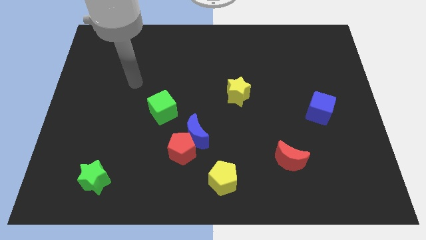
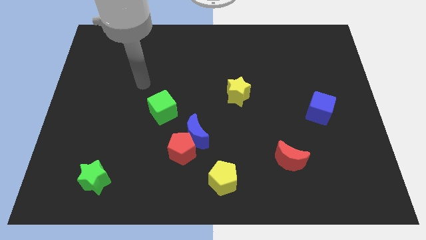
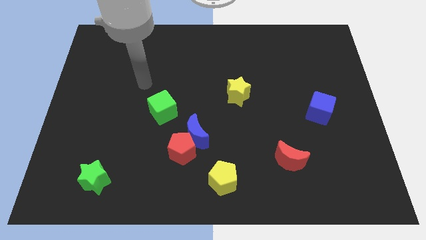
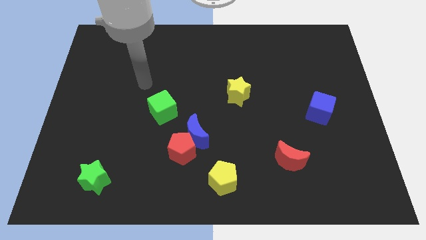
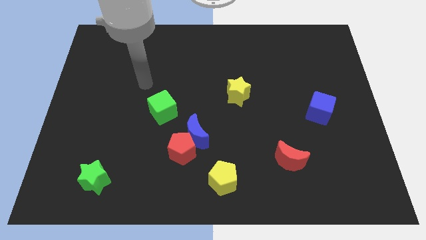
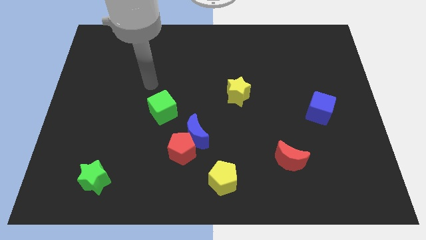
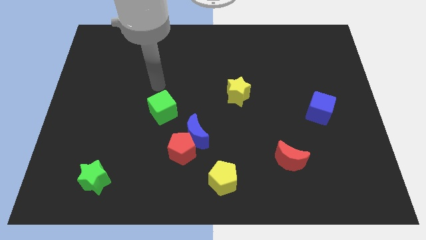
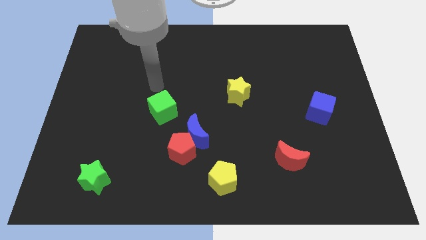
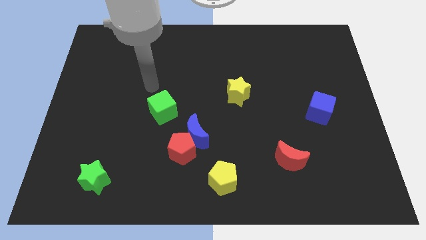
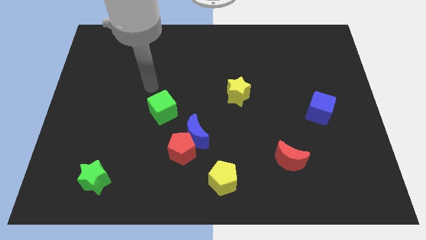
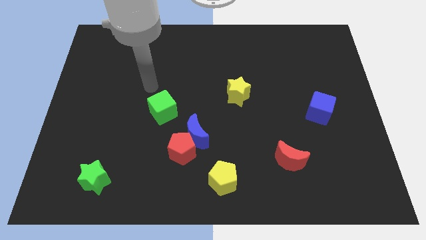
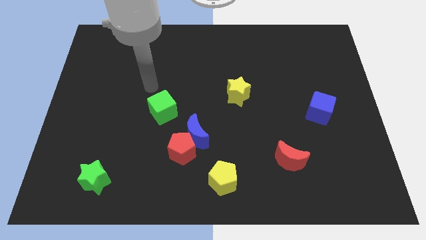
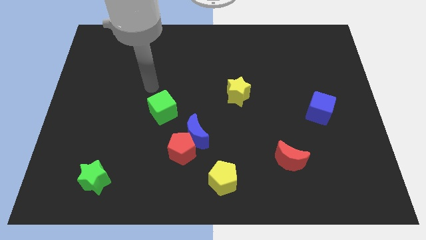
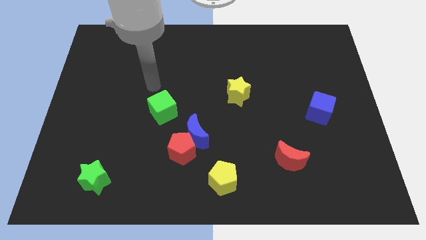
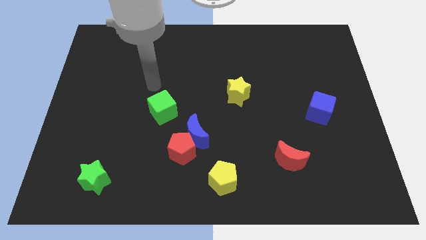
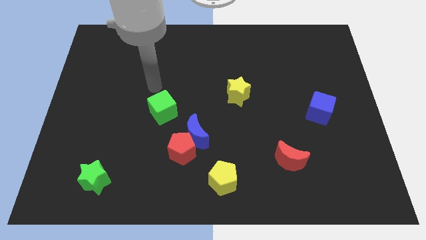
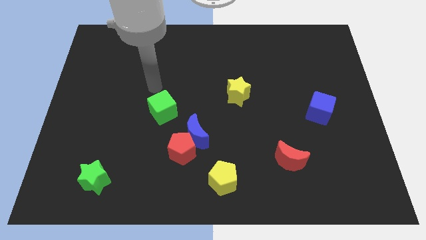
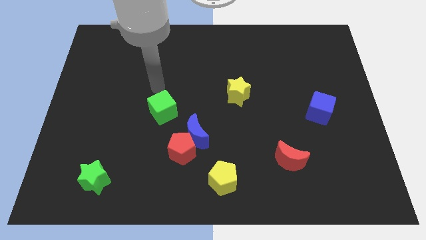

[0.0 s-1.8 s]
move the arm slightly to the green cube

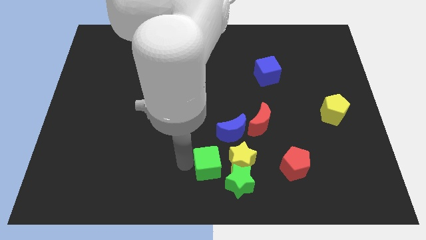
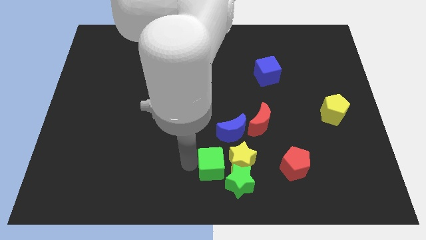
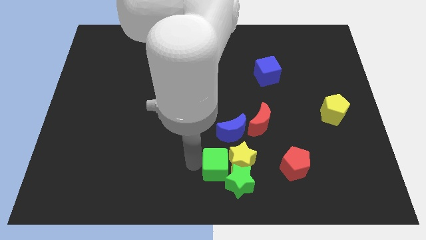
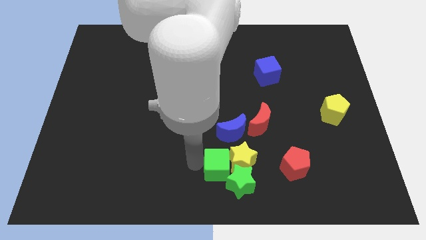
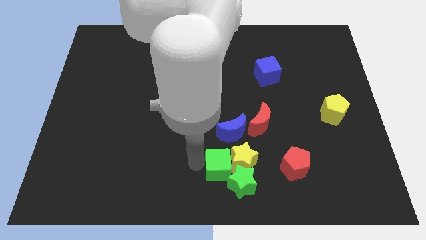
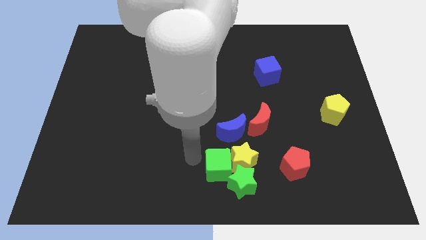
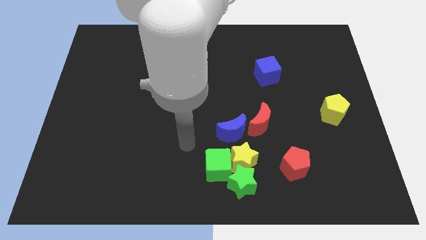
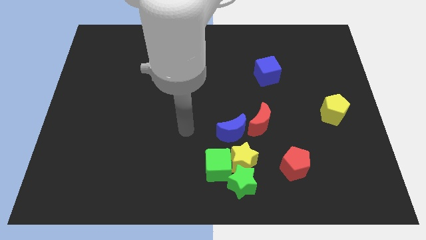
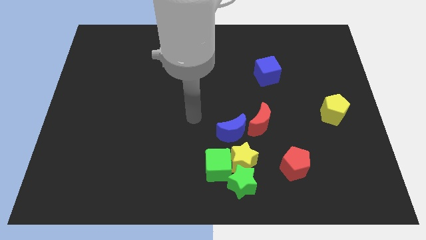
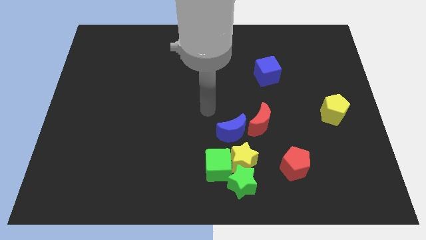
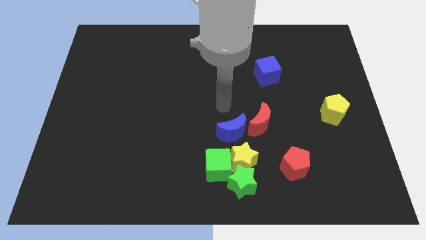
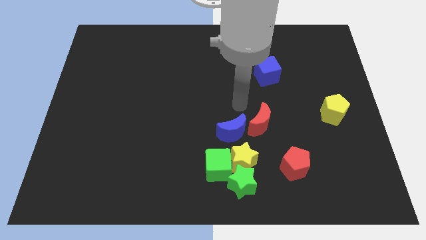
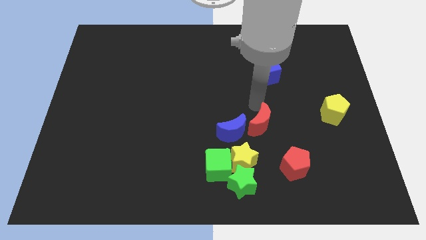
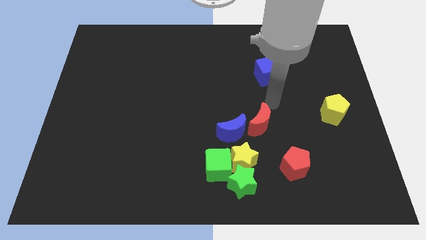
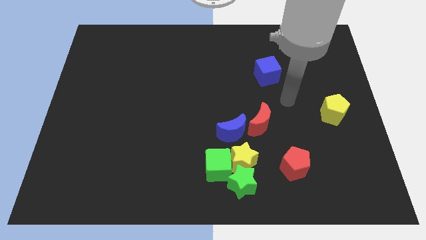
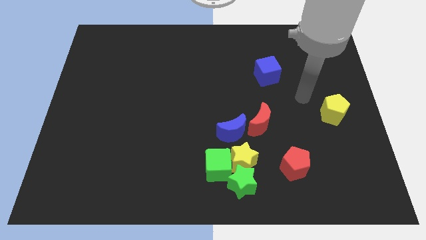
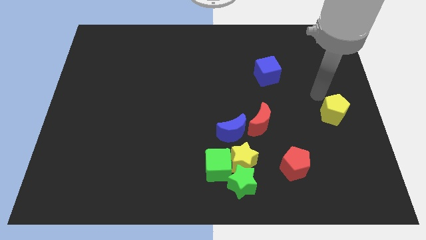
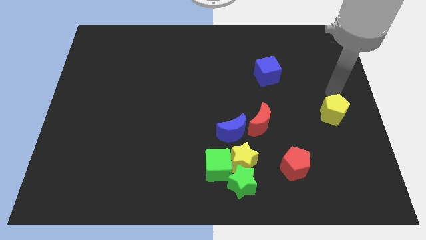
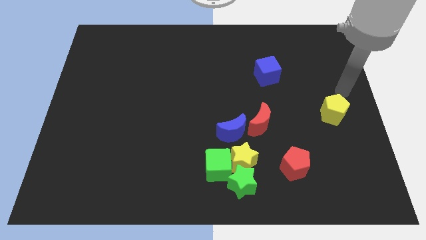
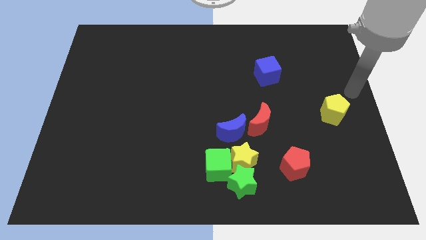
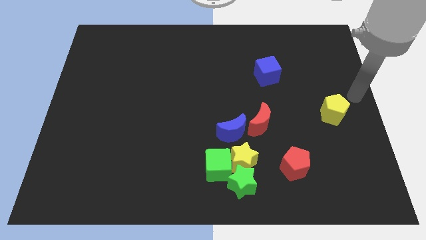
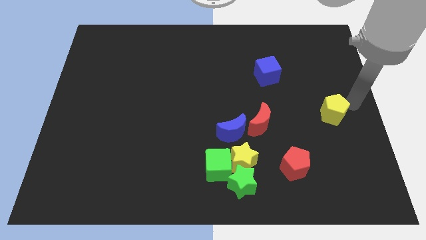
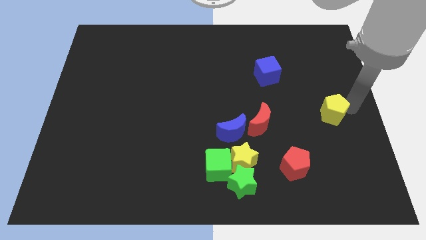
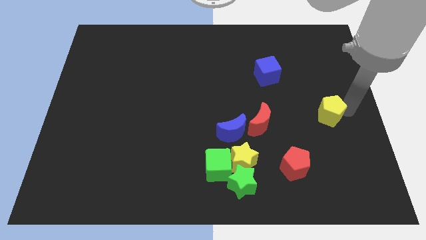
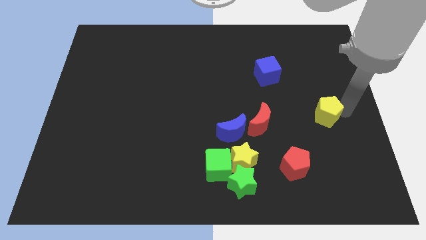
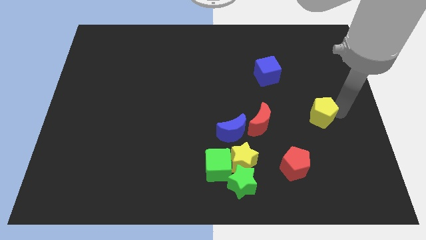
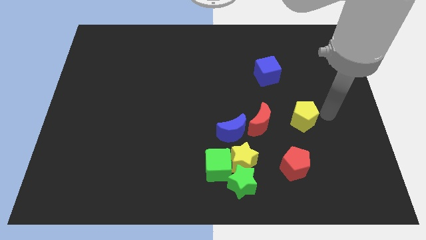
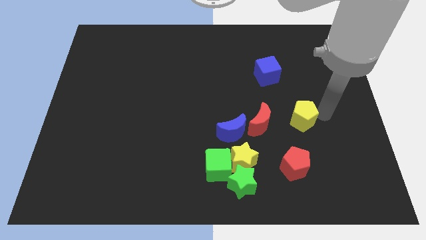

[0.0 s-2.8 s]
move your arm away from green cube

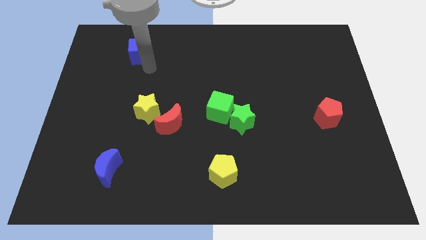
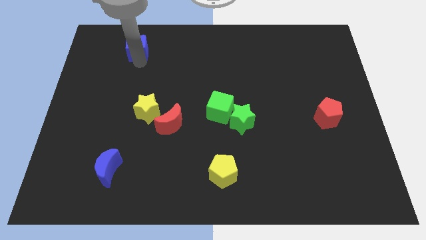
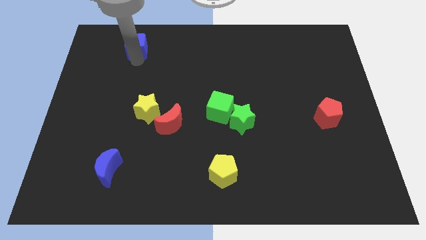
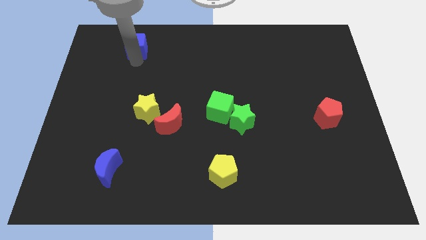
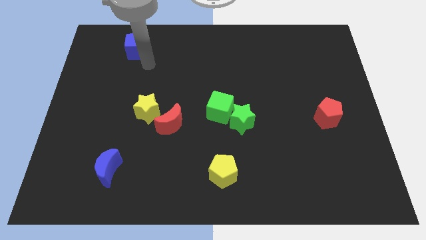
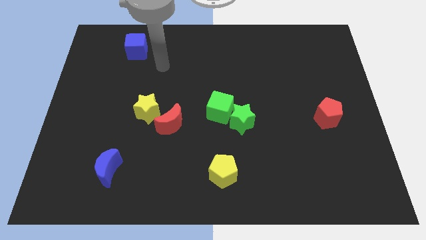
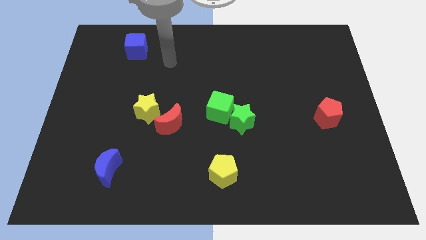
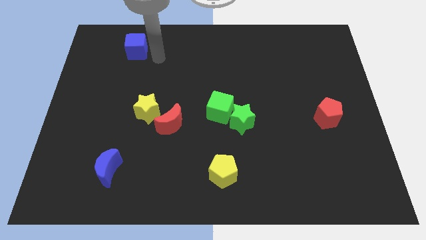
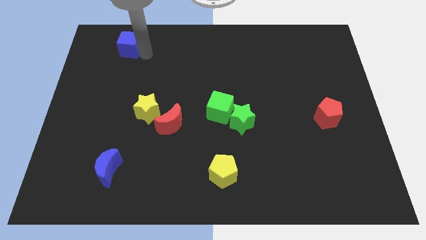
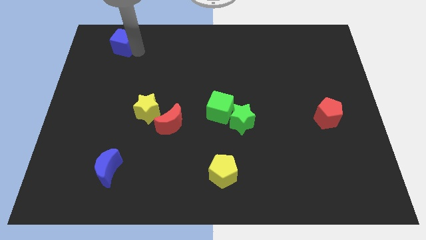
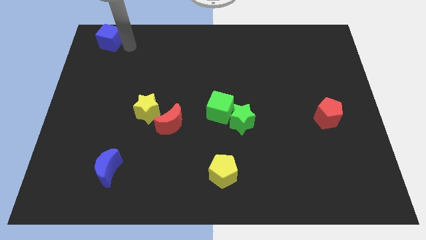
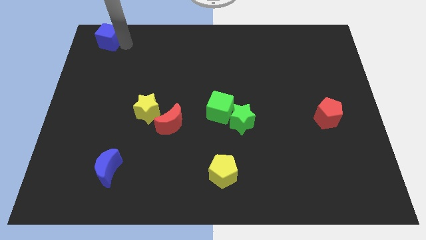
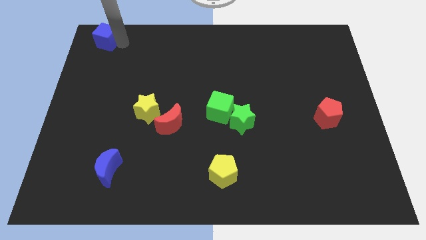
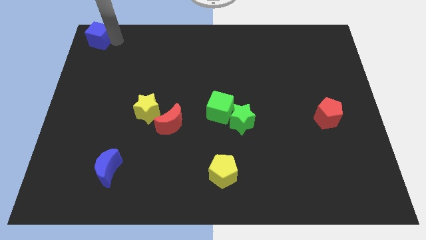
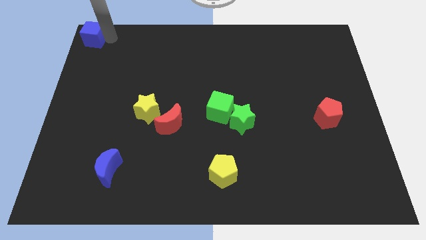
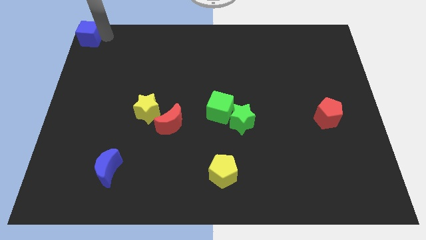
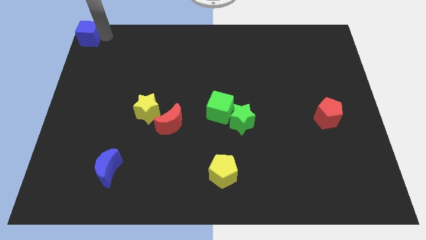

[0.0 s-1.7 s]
push the blue cube to the top left corner of the board

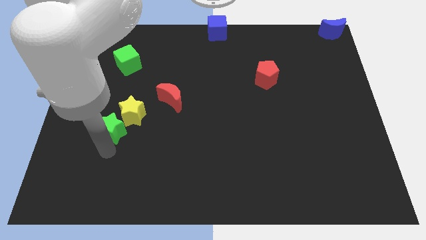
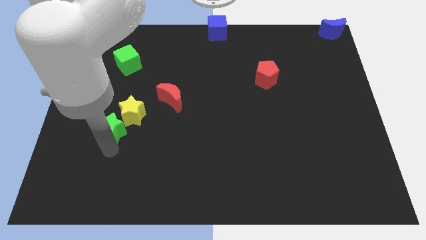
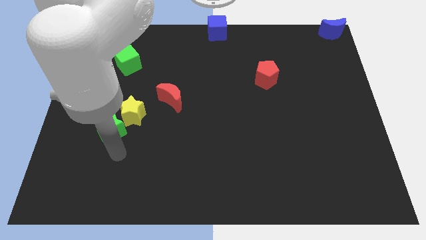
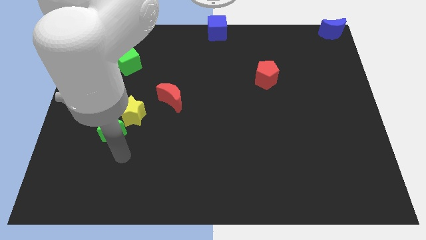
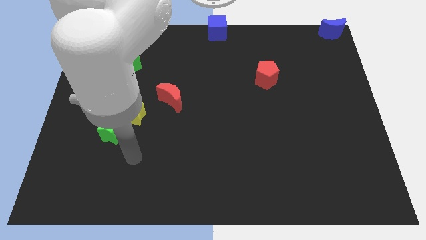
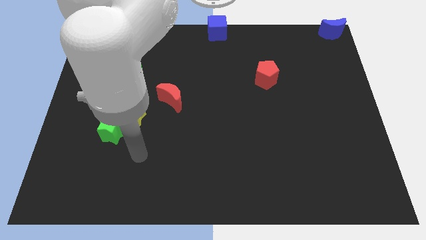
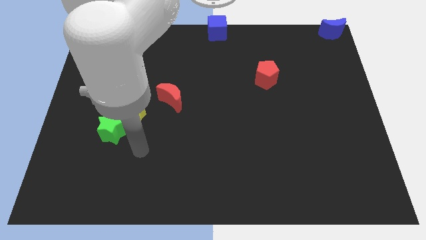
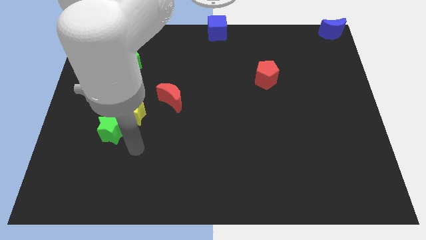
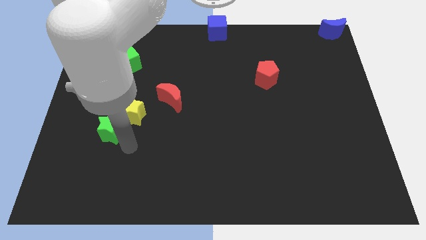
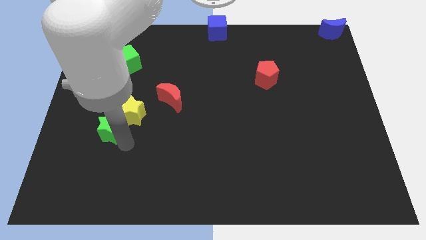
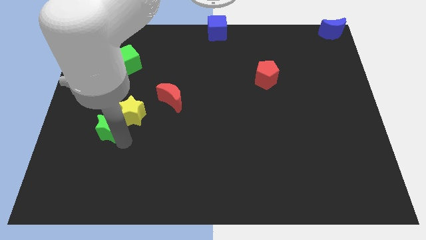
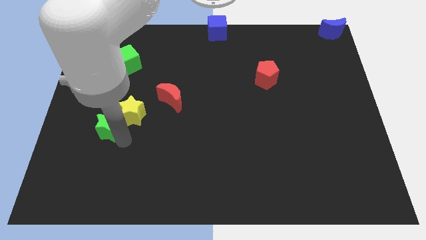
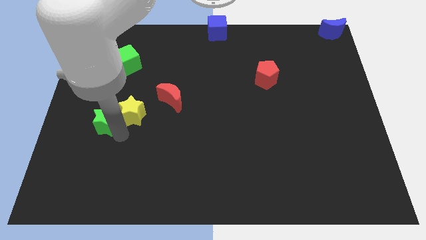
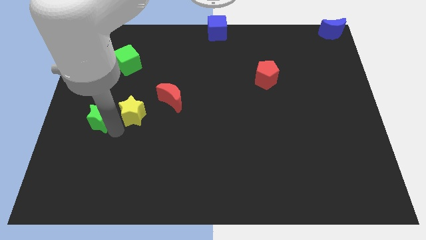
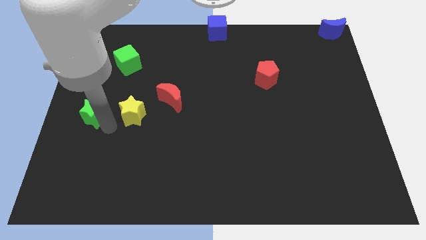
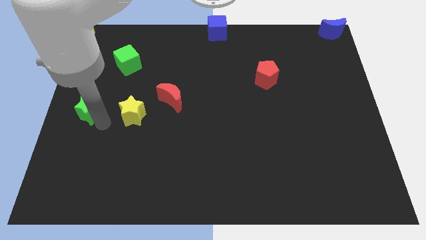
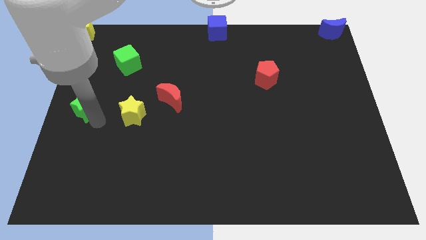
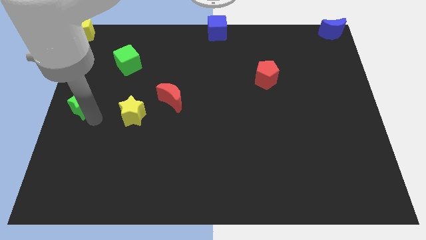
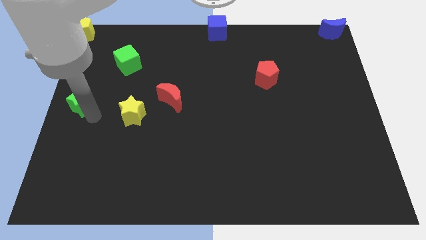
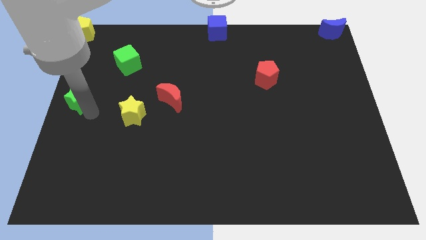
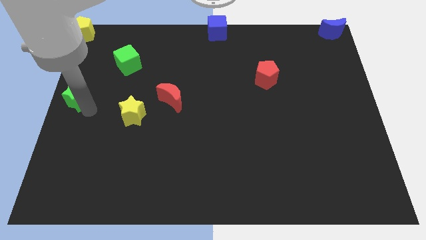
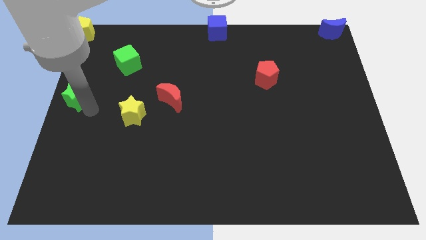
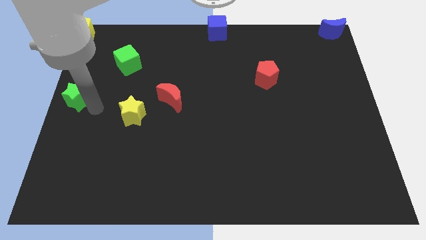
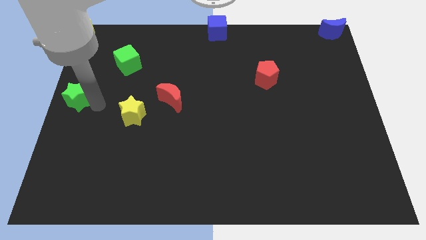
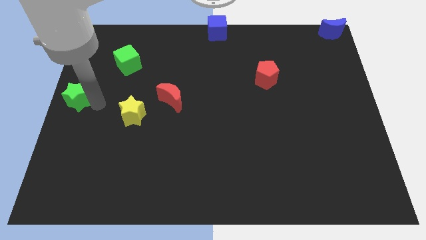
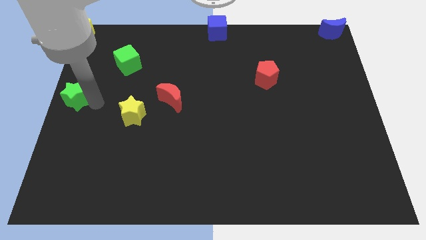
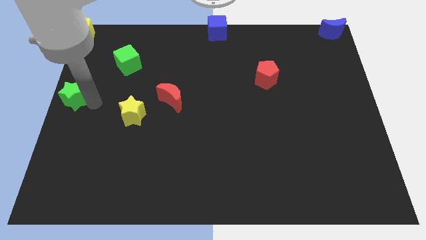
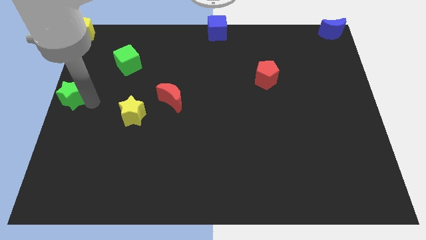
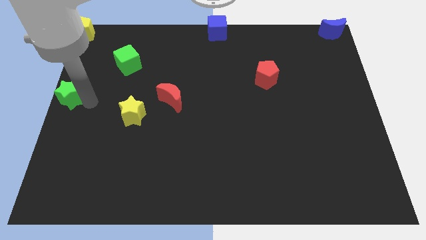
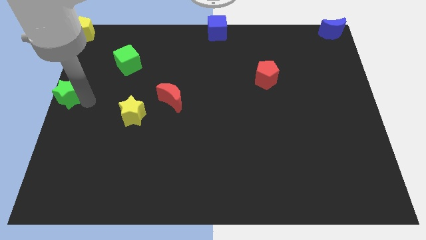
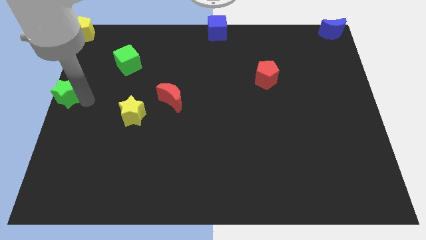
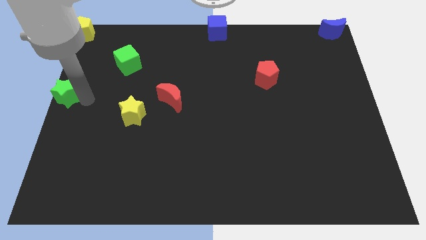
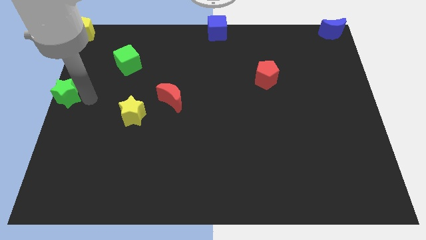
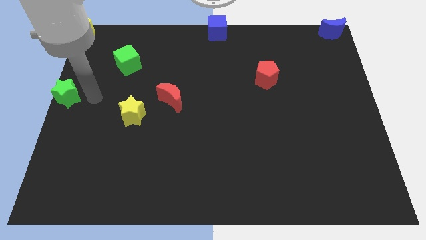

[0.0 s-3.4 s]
move green star on the left side of the board
